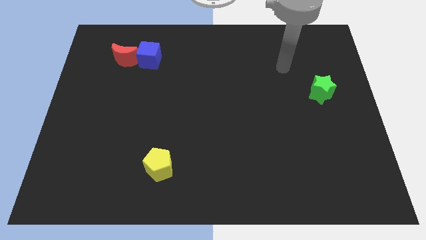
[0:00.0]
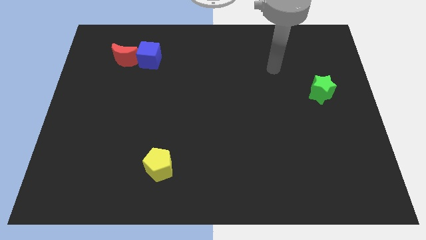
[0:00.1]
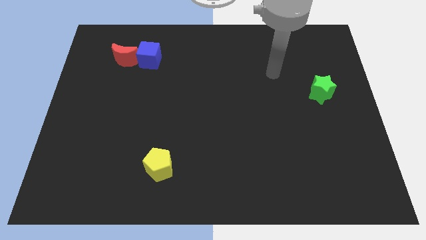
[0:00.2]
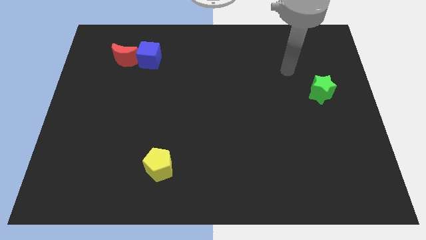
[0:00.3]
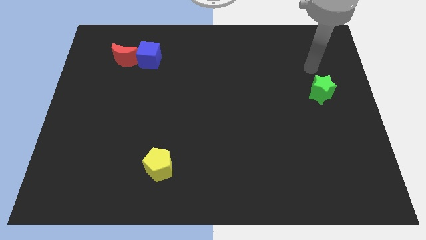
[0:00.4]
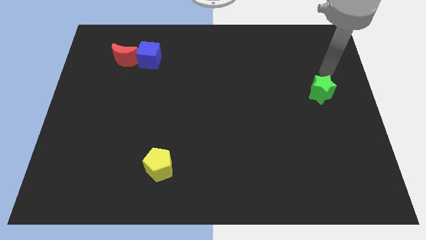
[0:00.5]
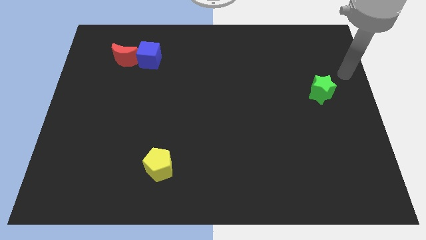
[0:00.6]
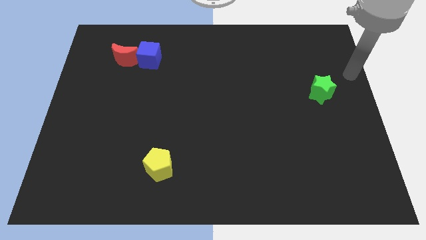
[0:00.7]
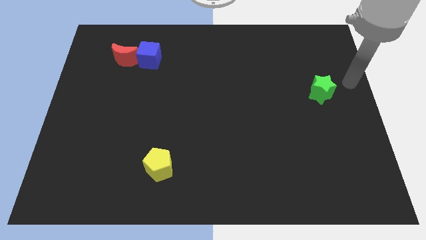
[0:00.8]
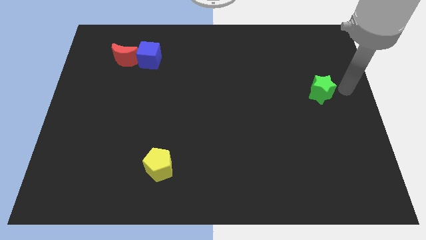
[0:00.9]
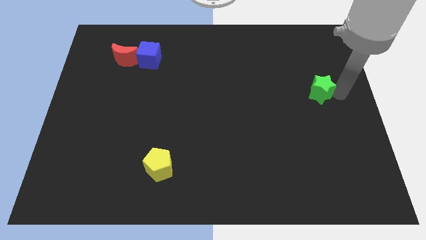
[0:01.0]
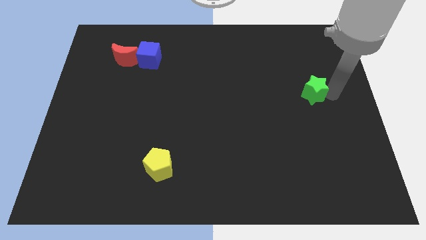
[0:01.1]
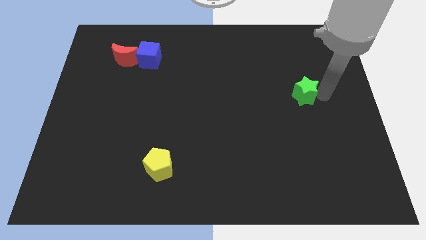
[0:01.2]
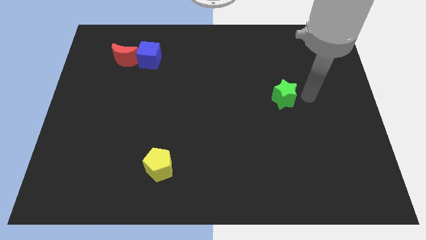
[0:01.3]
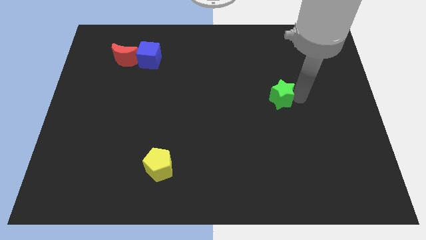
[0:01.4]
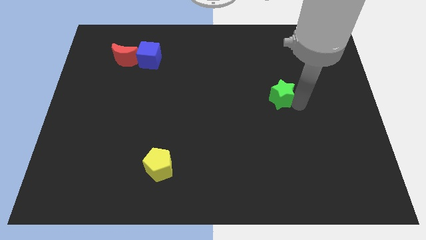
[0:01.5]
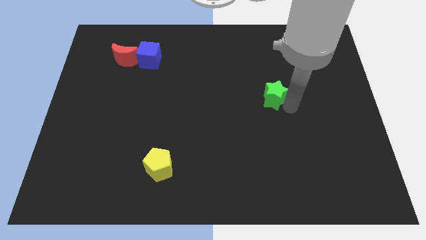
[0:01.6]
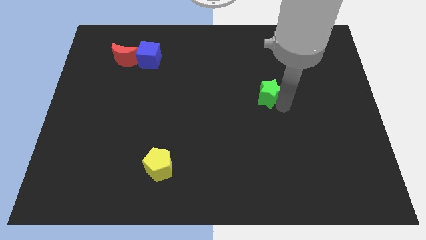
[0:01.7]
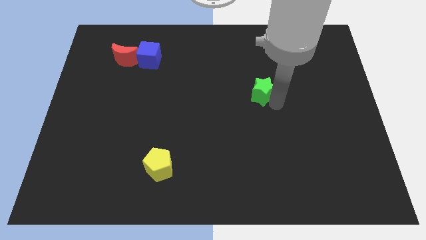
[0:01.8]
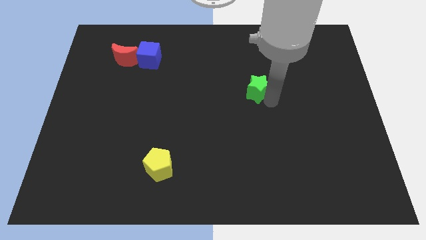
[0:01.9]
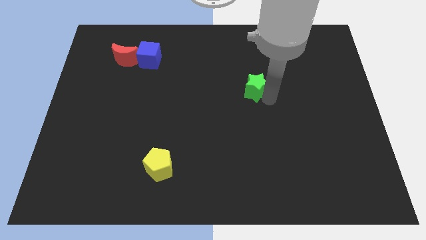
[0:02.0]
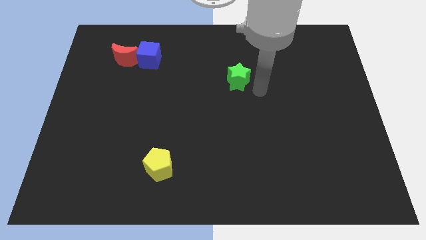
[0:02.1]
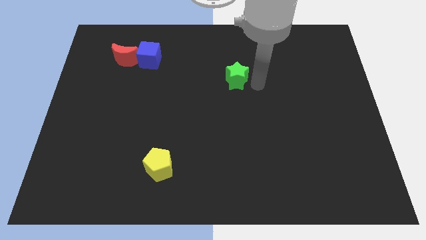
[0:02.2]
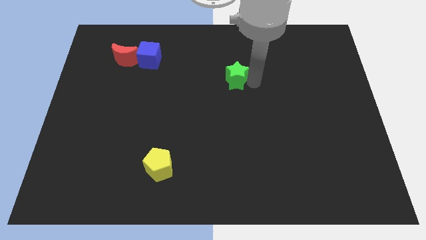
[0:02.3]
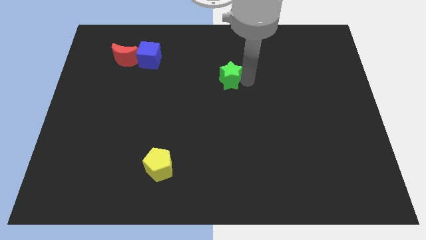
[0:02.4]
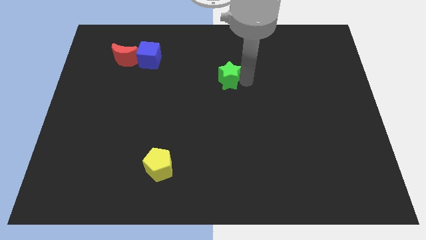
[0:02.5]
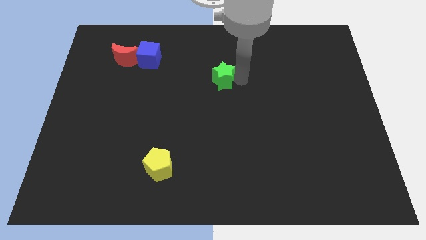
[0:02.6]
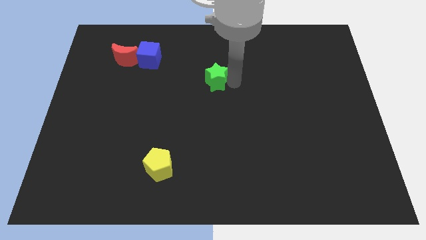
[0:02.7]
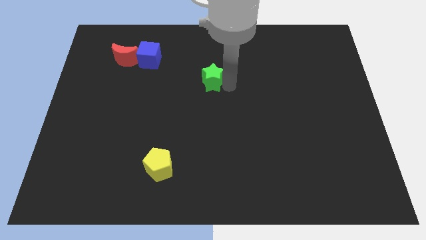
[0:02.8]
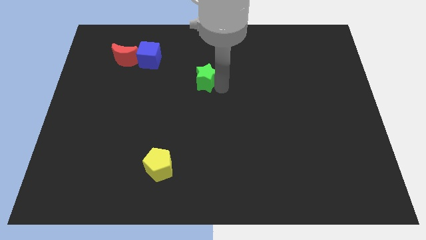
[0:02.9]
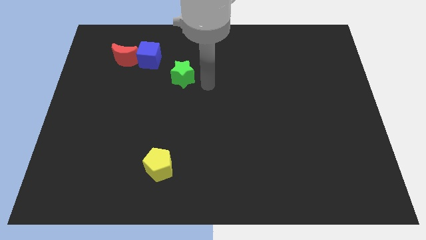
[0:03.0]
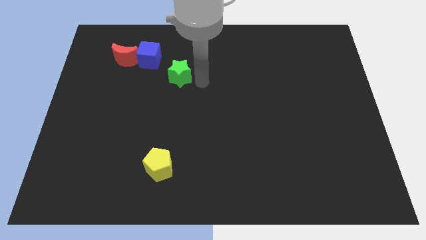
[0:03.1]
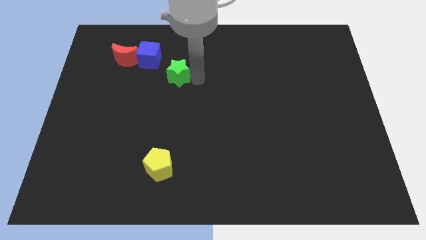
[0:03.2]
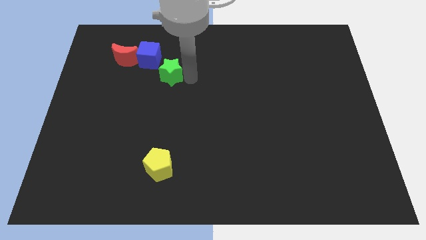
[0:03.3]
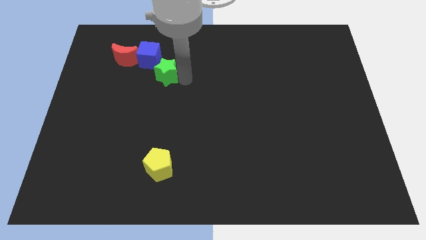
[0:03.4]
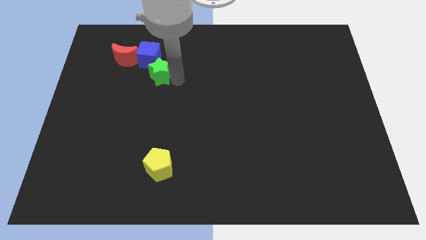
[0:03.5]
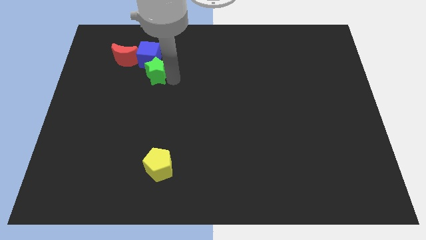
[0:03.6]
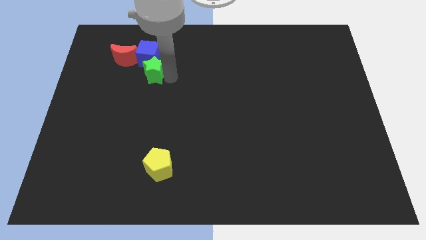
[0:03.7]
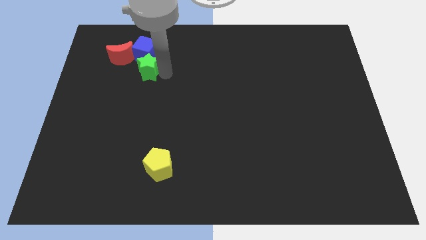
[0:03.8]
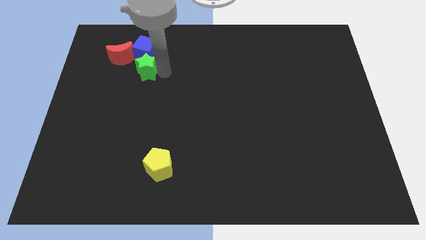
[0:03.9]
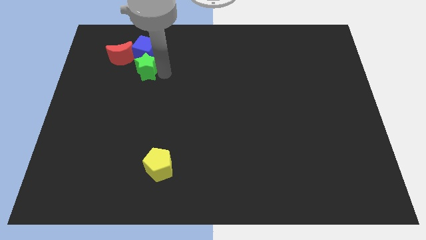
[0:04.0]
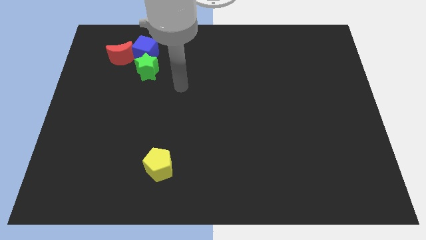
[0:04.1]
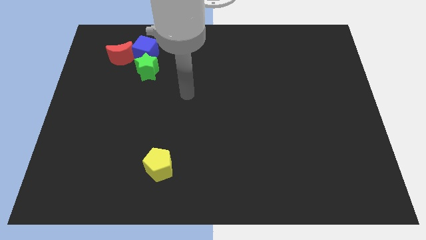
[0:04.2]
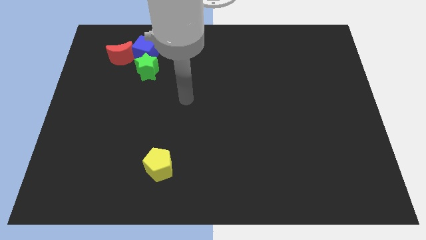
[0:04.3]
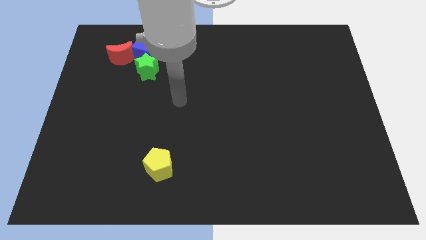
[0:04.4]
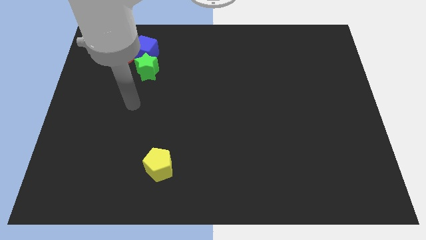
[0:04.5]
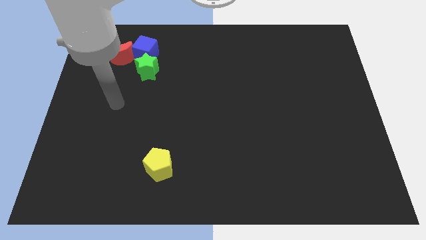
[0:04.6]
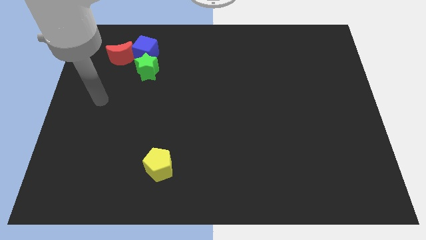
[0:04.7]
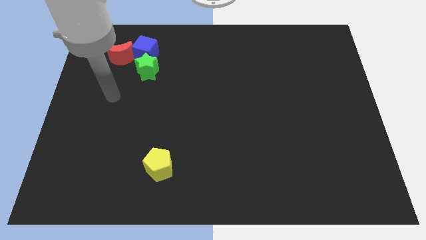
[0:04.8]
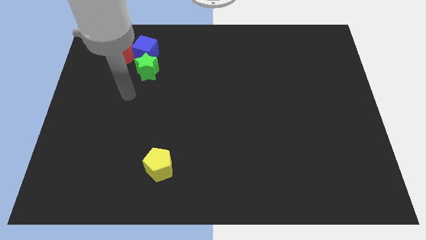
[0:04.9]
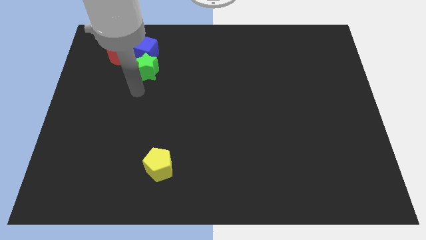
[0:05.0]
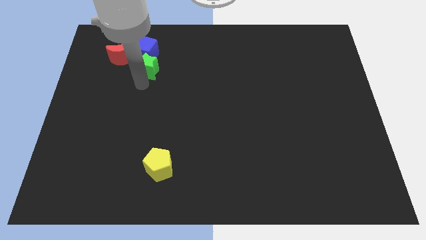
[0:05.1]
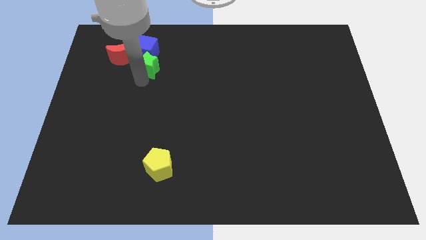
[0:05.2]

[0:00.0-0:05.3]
push the green block to the cube

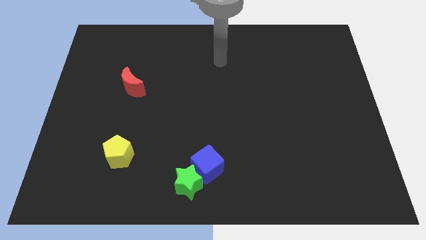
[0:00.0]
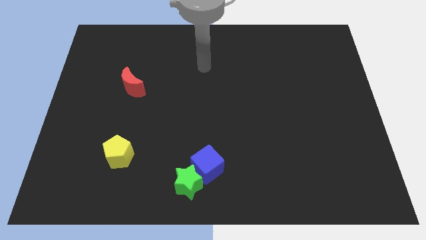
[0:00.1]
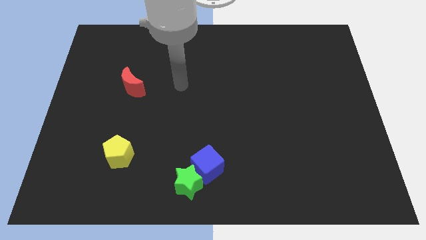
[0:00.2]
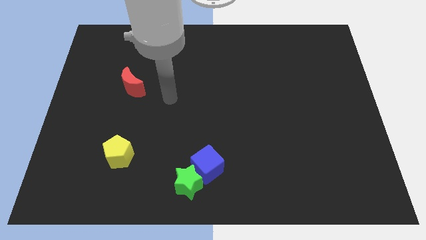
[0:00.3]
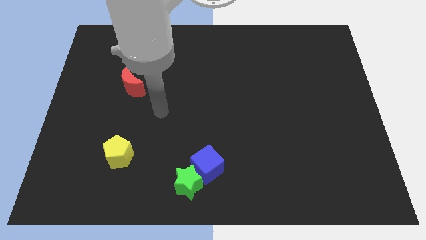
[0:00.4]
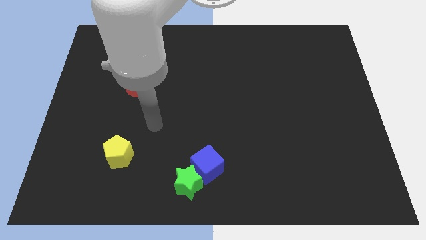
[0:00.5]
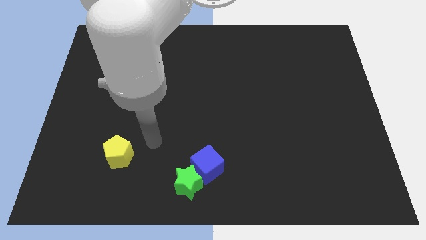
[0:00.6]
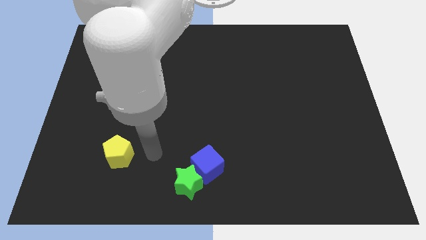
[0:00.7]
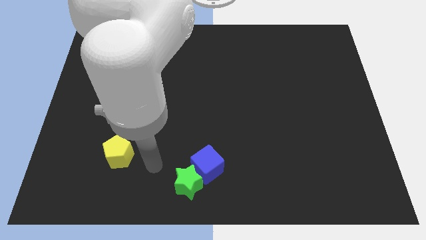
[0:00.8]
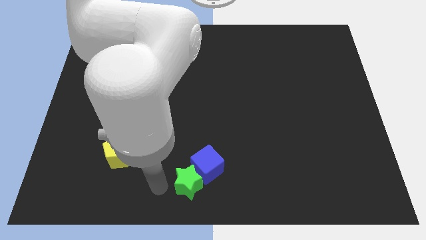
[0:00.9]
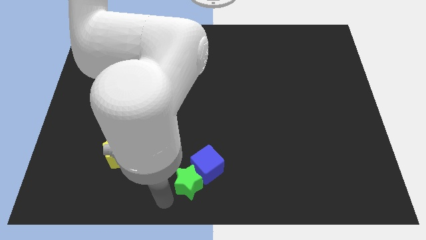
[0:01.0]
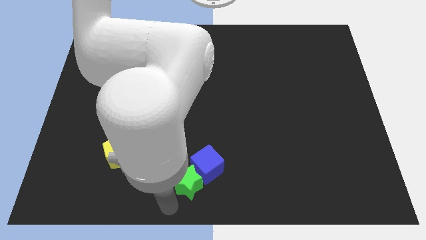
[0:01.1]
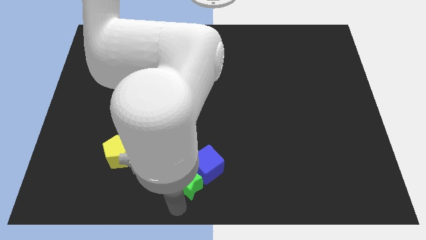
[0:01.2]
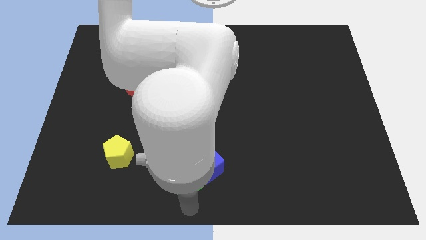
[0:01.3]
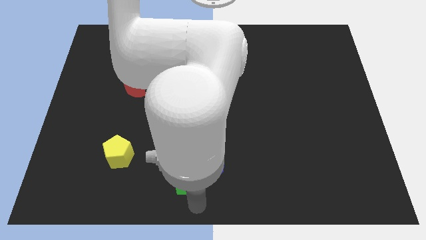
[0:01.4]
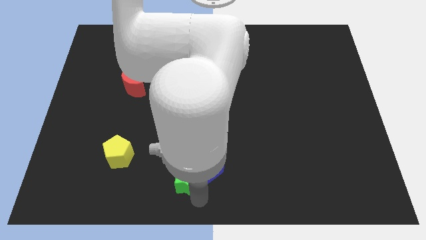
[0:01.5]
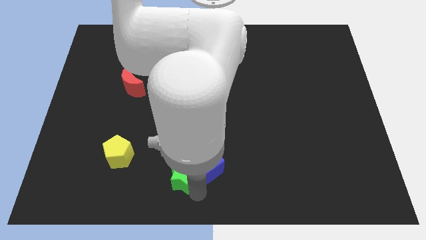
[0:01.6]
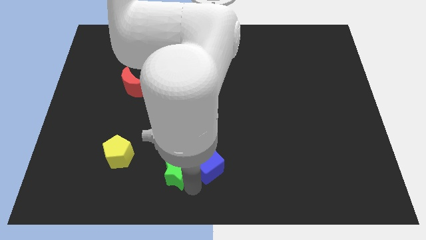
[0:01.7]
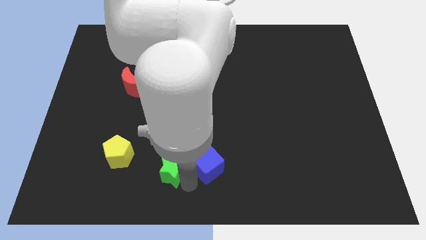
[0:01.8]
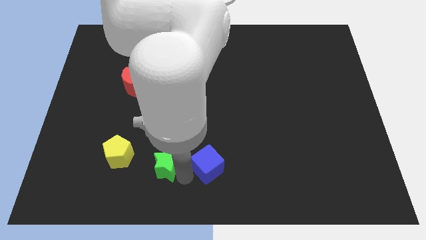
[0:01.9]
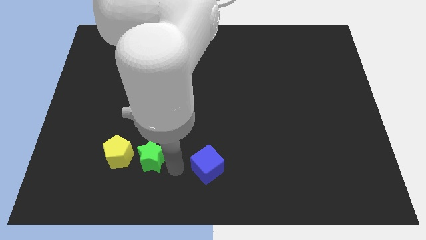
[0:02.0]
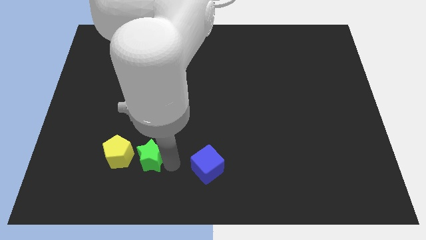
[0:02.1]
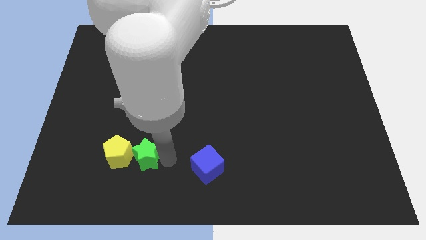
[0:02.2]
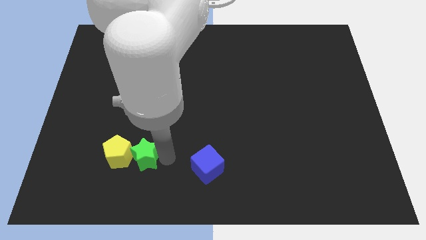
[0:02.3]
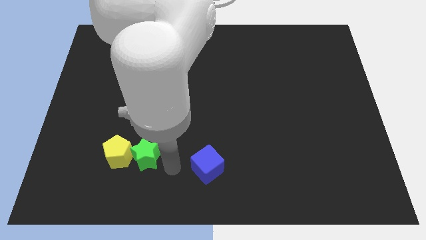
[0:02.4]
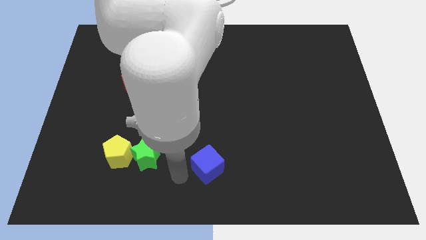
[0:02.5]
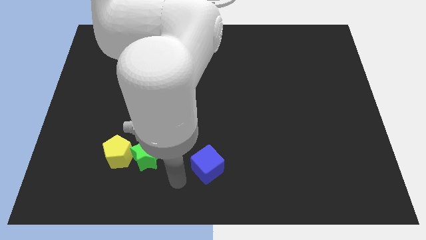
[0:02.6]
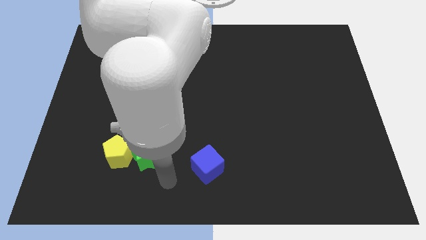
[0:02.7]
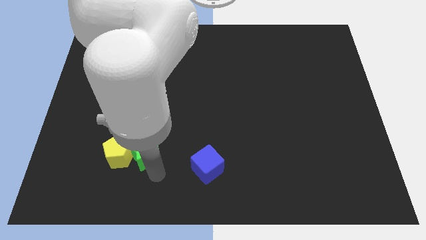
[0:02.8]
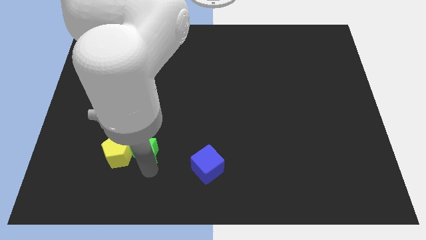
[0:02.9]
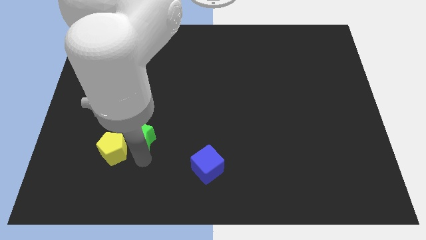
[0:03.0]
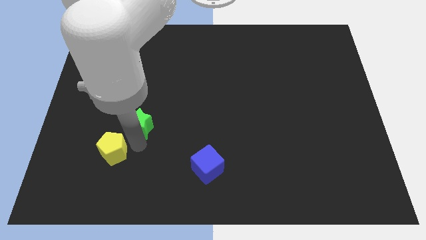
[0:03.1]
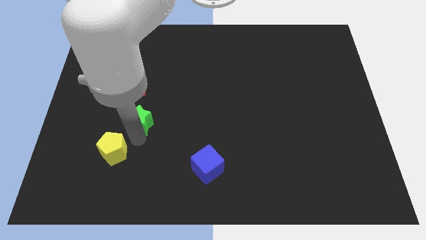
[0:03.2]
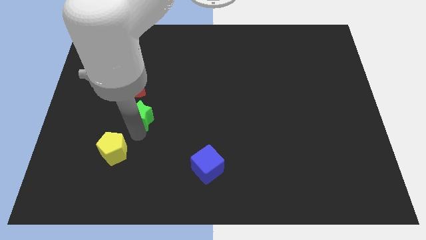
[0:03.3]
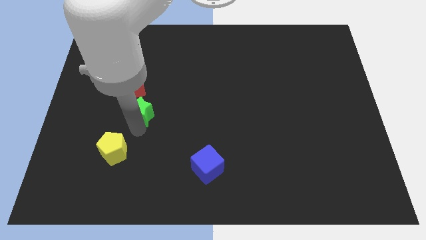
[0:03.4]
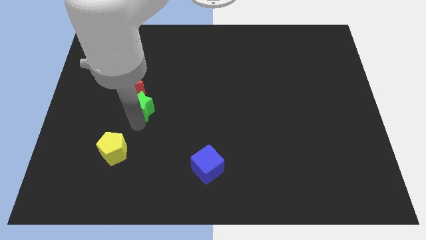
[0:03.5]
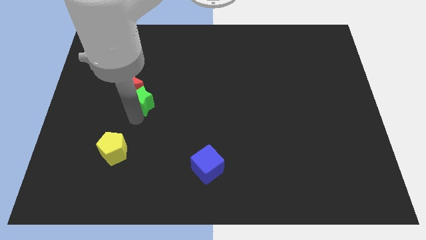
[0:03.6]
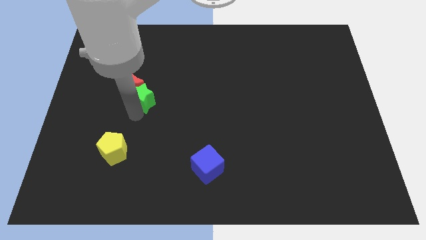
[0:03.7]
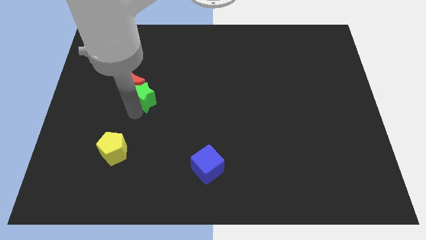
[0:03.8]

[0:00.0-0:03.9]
put the star next to the red moon
